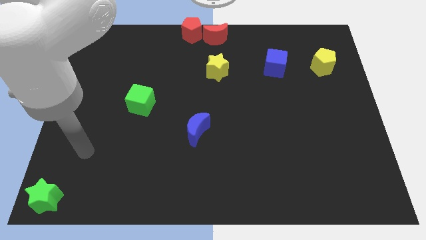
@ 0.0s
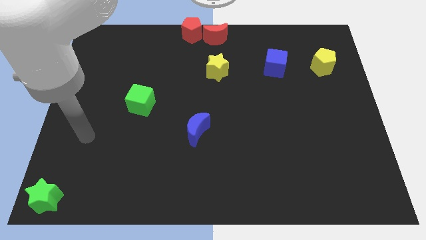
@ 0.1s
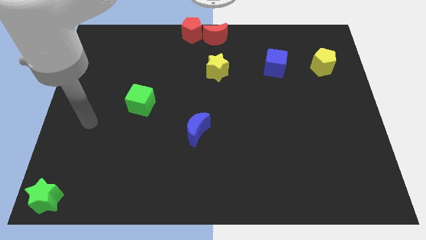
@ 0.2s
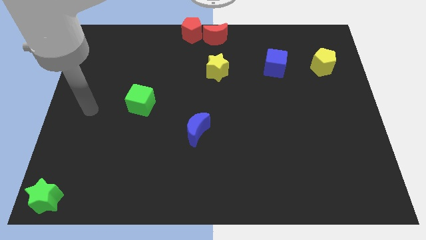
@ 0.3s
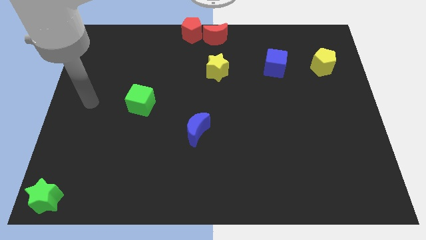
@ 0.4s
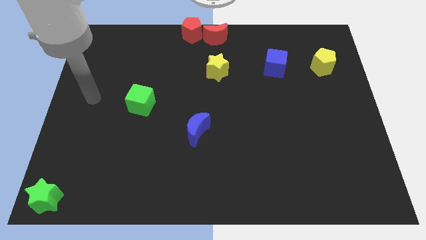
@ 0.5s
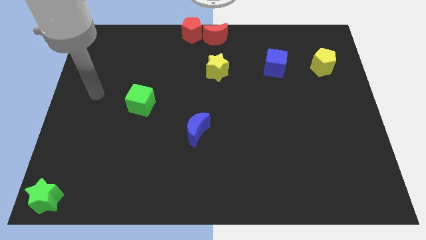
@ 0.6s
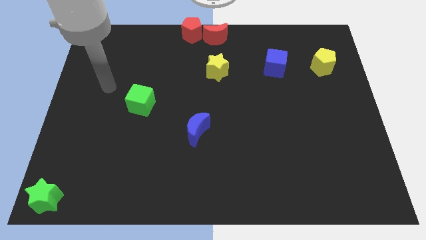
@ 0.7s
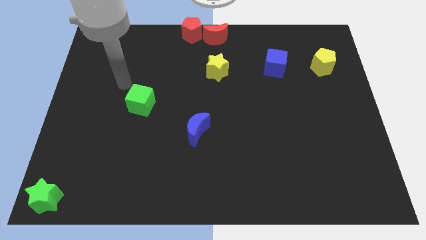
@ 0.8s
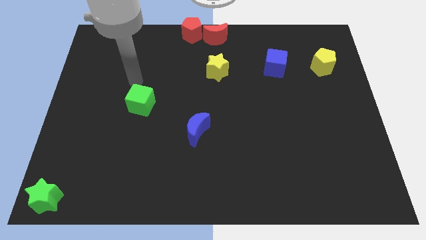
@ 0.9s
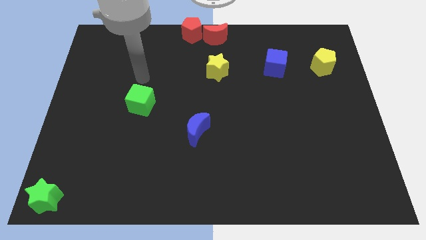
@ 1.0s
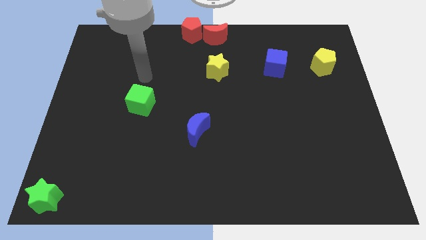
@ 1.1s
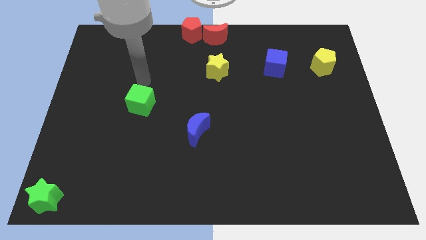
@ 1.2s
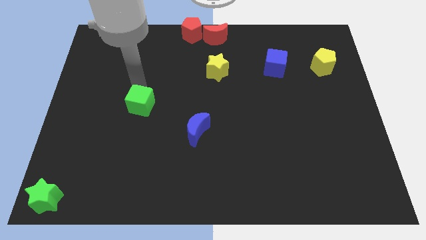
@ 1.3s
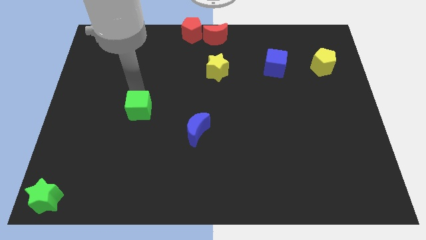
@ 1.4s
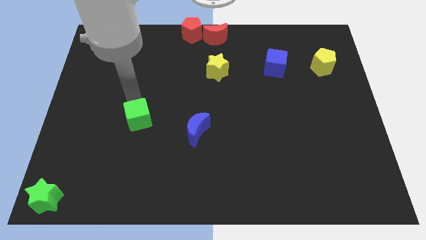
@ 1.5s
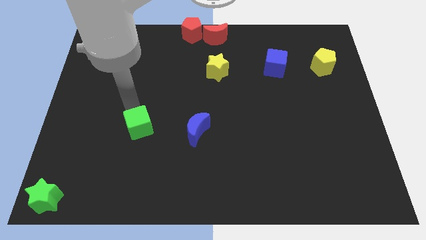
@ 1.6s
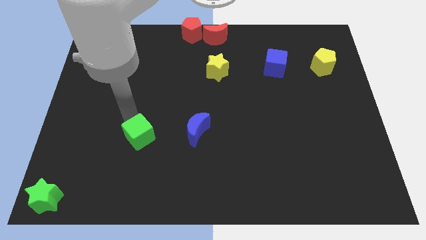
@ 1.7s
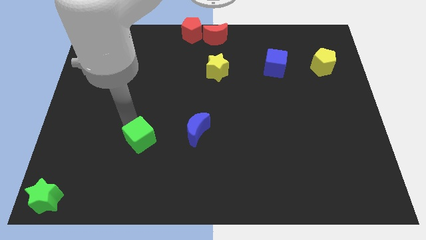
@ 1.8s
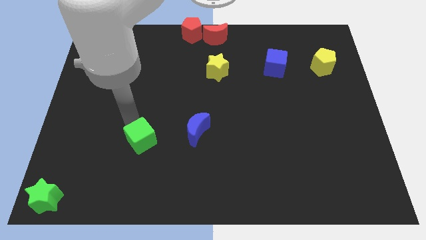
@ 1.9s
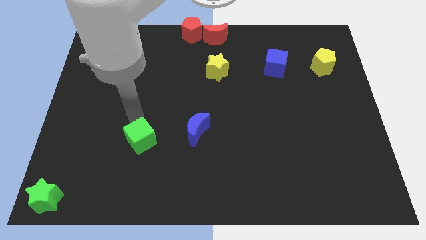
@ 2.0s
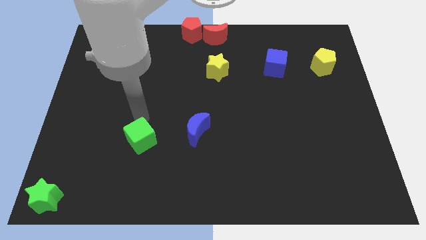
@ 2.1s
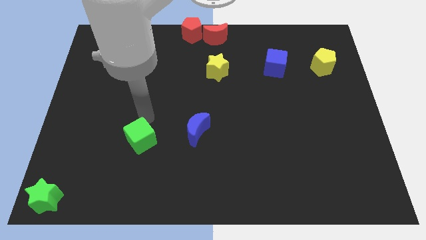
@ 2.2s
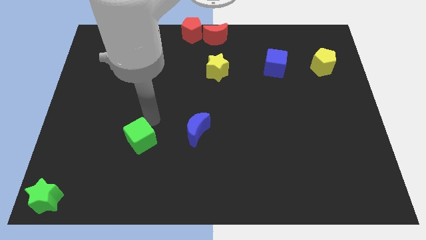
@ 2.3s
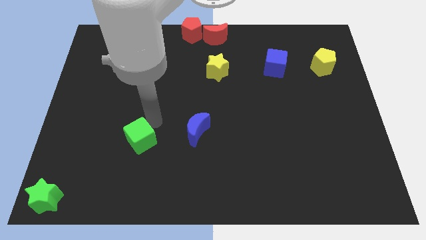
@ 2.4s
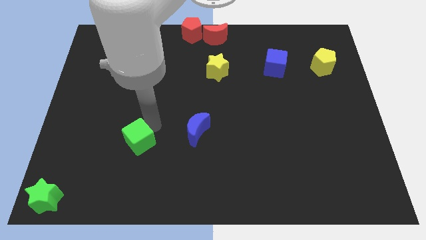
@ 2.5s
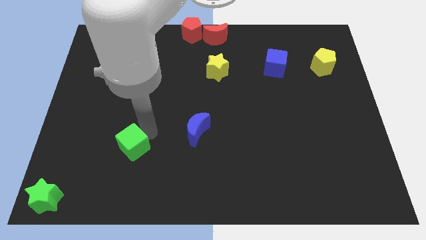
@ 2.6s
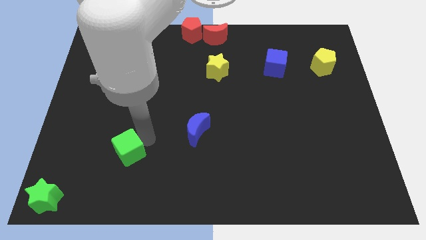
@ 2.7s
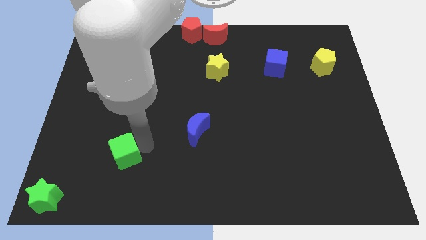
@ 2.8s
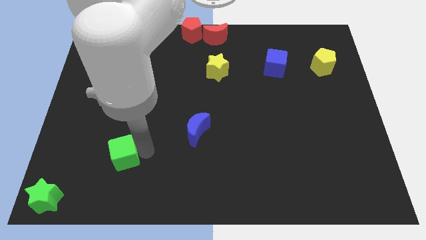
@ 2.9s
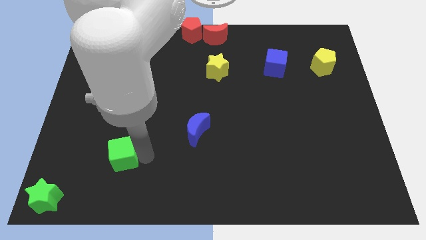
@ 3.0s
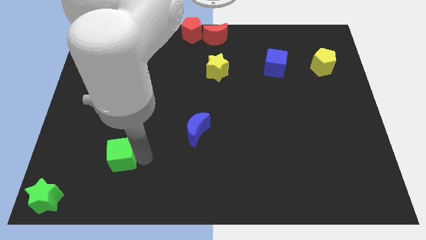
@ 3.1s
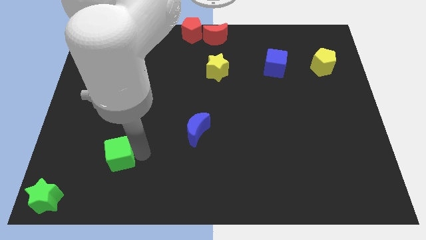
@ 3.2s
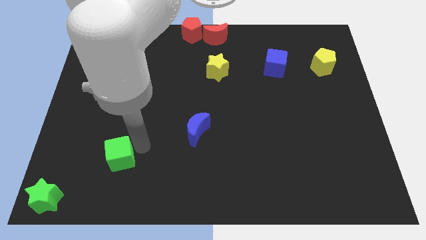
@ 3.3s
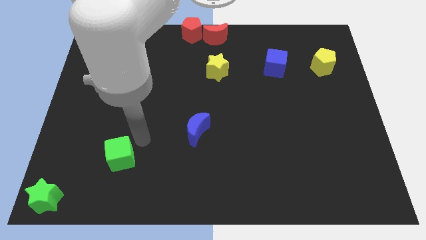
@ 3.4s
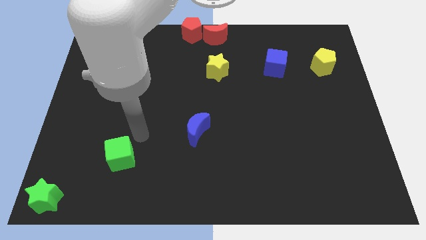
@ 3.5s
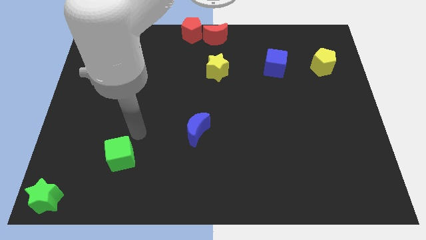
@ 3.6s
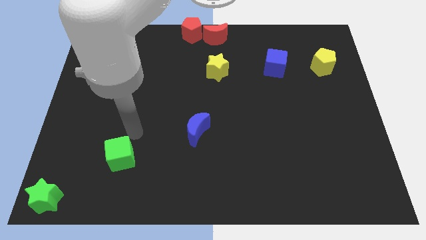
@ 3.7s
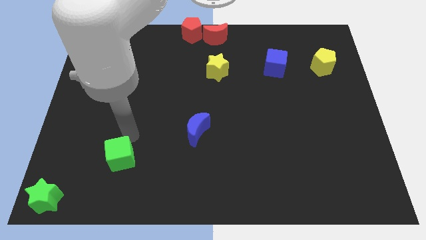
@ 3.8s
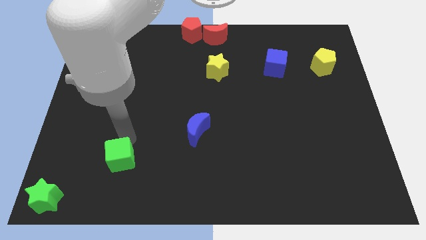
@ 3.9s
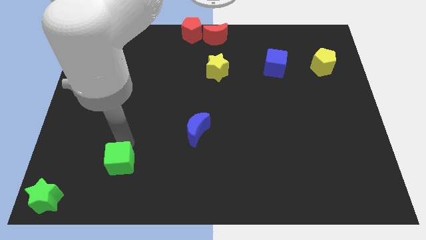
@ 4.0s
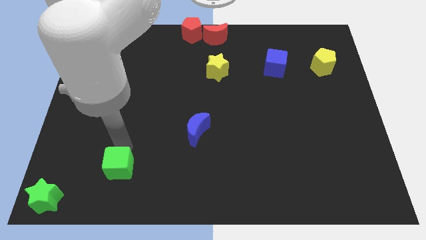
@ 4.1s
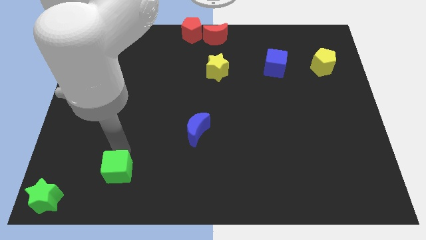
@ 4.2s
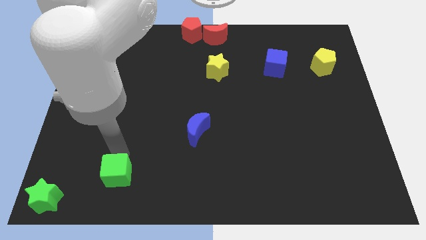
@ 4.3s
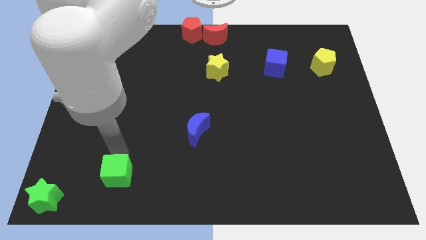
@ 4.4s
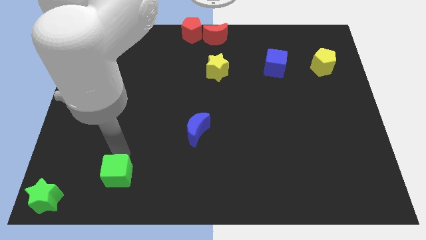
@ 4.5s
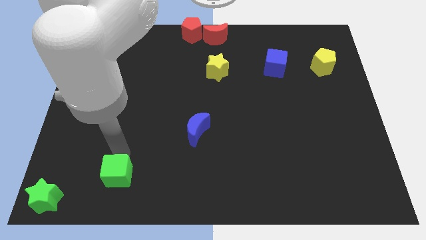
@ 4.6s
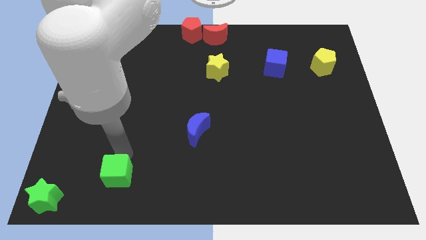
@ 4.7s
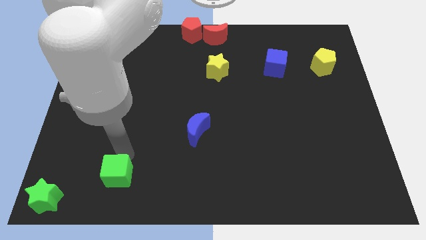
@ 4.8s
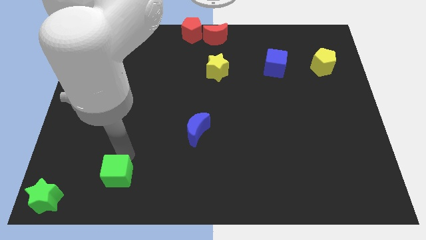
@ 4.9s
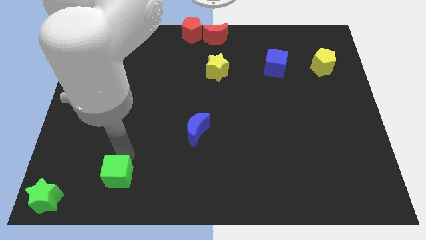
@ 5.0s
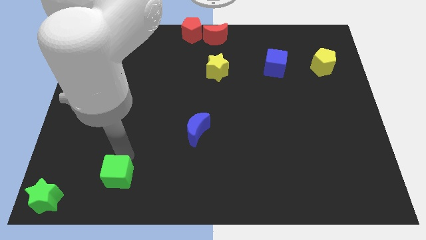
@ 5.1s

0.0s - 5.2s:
move the green cube slightly down

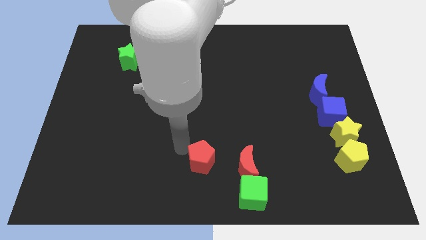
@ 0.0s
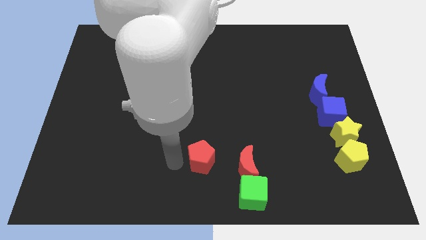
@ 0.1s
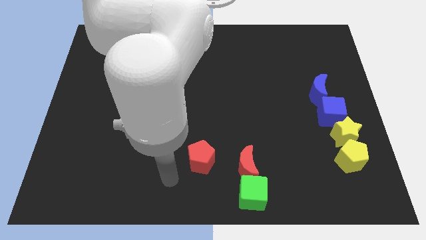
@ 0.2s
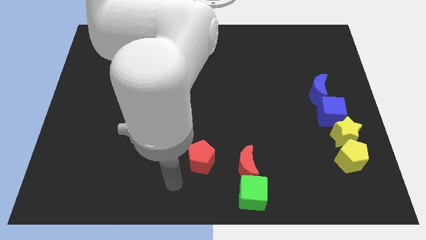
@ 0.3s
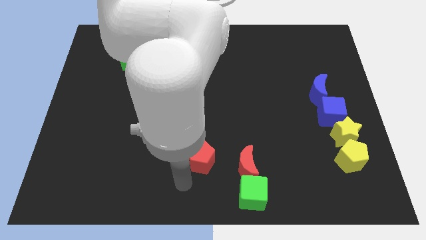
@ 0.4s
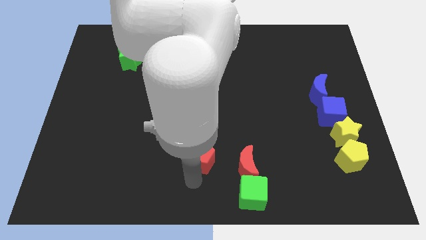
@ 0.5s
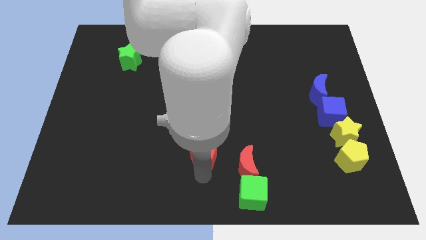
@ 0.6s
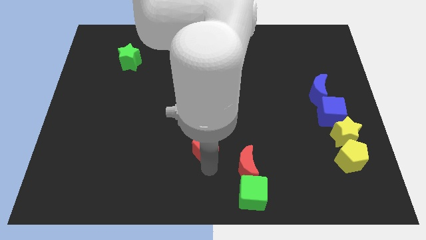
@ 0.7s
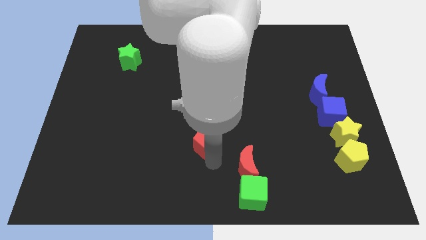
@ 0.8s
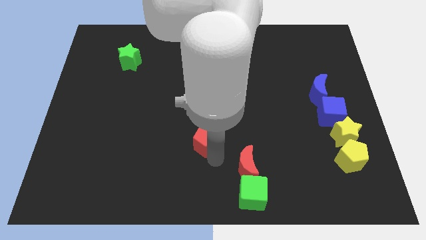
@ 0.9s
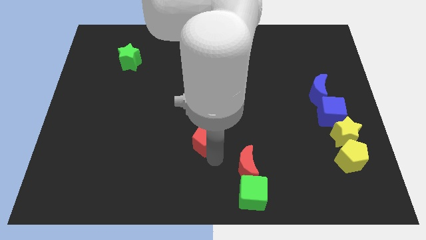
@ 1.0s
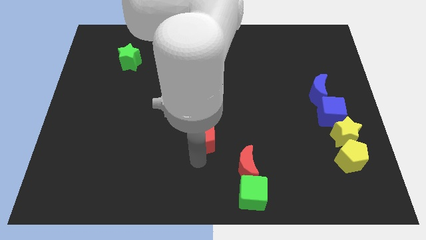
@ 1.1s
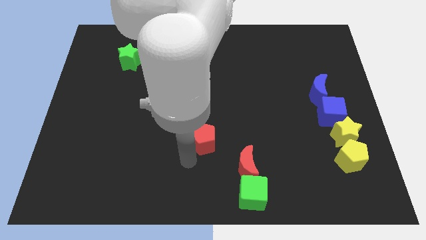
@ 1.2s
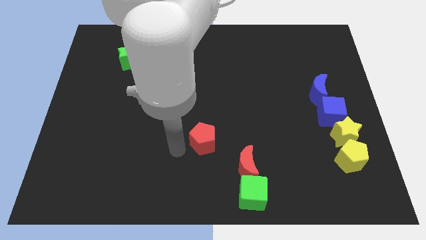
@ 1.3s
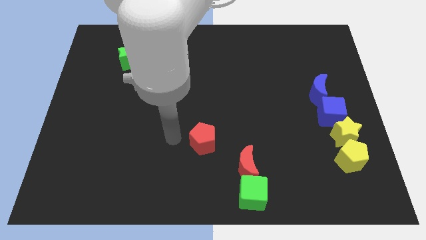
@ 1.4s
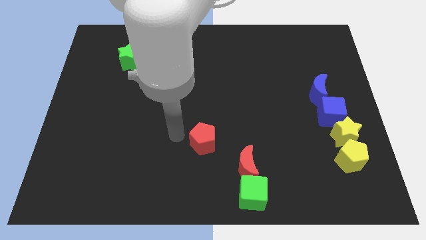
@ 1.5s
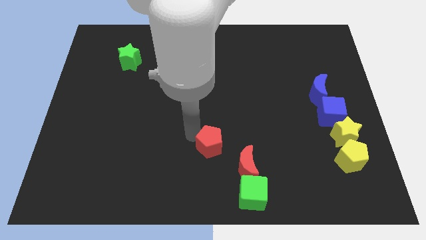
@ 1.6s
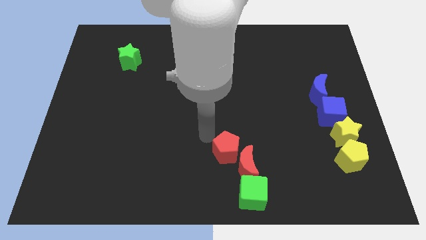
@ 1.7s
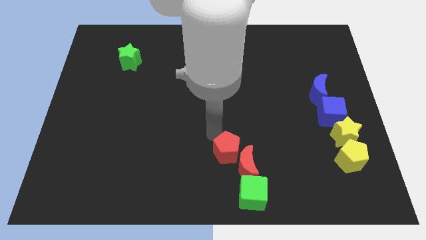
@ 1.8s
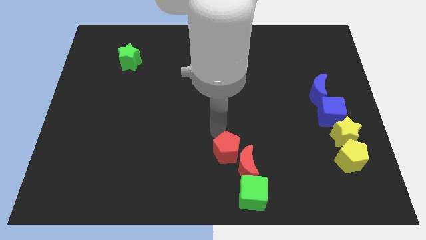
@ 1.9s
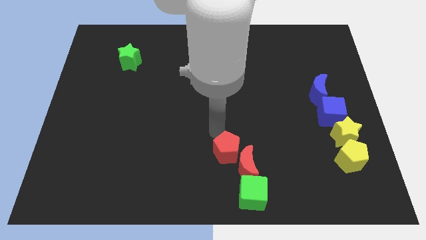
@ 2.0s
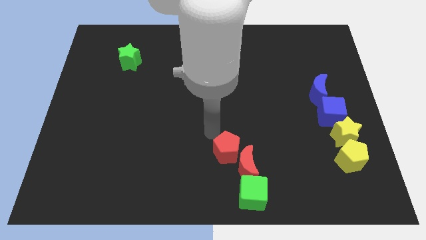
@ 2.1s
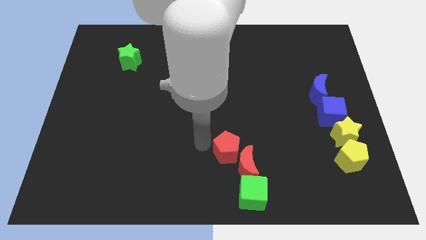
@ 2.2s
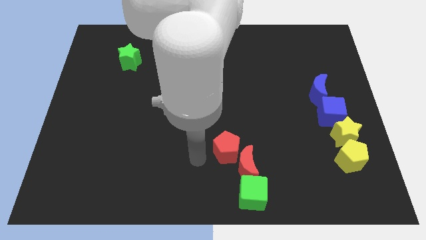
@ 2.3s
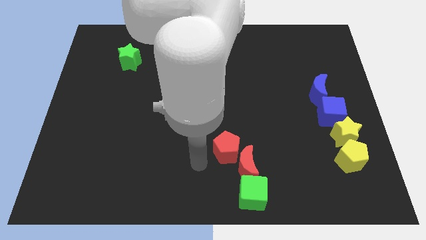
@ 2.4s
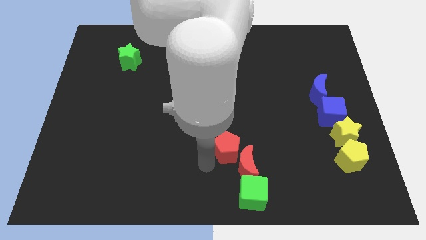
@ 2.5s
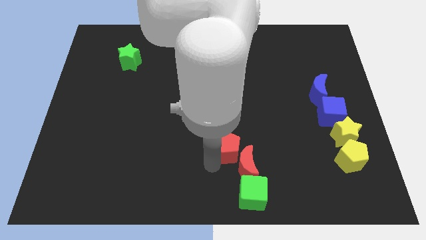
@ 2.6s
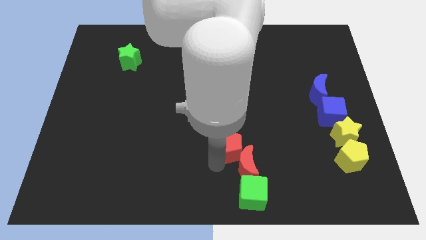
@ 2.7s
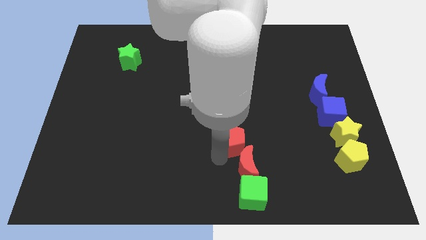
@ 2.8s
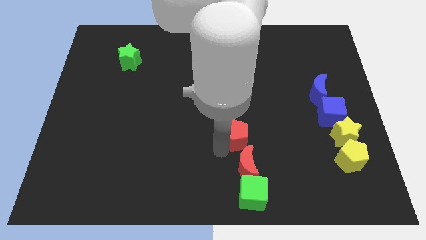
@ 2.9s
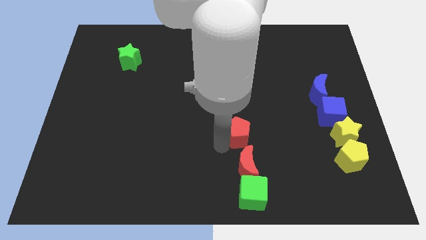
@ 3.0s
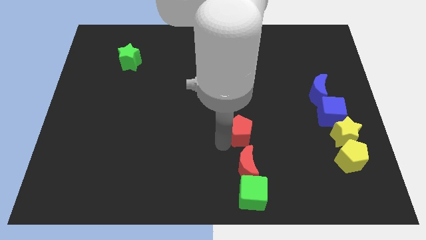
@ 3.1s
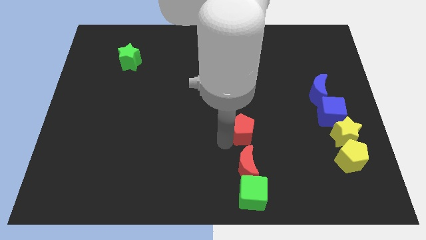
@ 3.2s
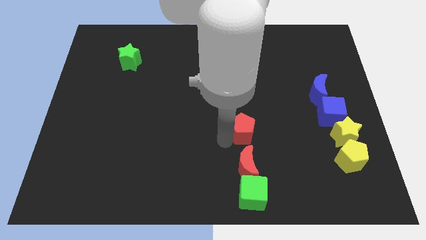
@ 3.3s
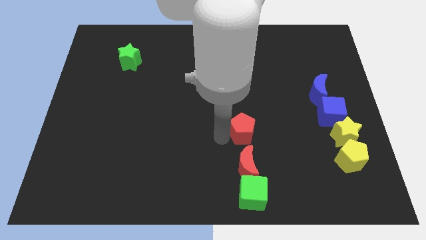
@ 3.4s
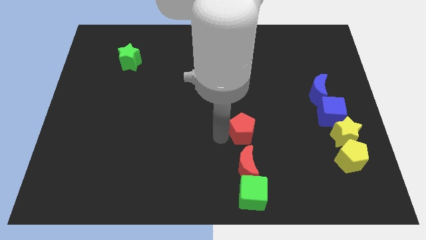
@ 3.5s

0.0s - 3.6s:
place the red pentagon left to the yellow star

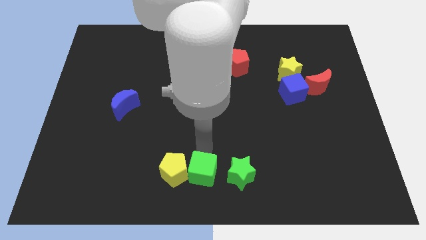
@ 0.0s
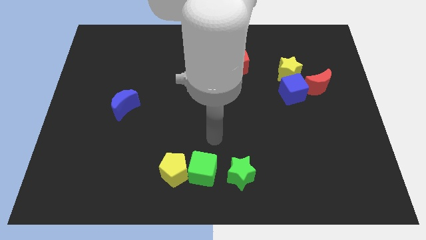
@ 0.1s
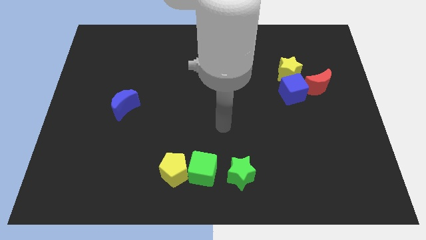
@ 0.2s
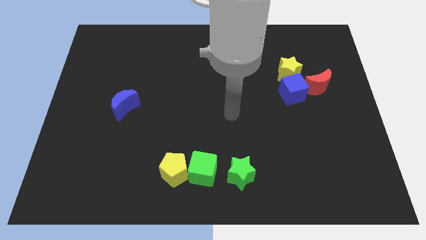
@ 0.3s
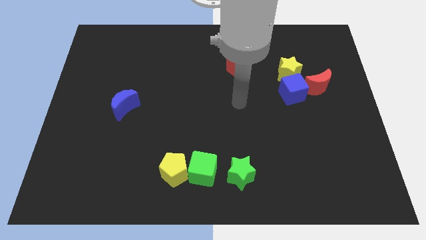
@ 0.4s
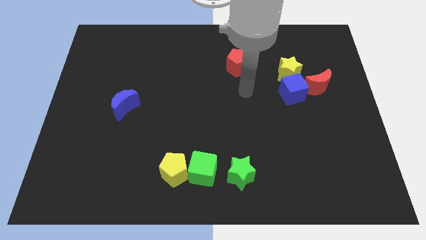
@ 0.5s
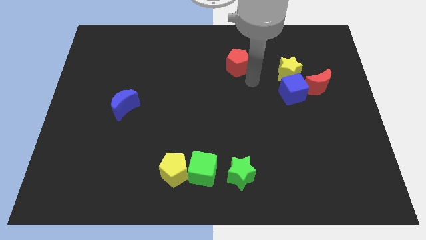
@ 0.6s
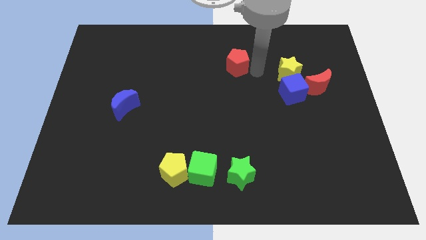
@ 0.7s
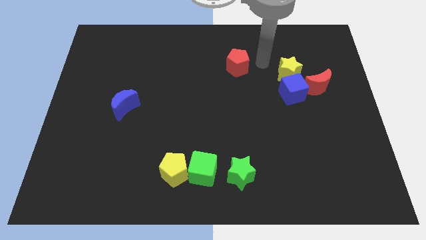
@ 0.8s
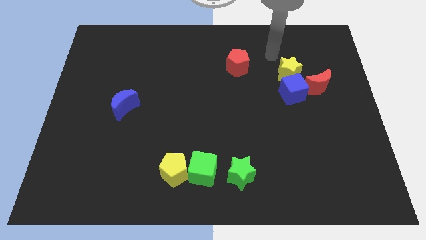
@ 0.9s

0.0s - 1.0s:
move your hand away from the green cube
